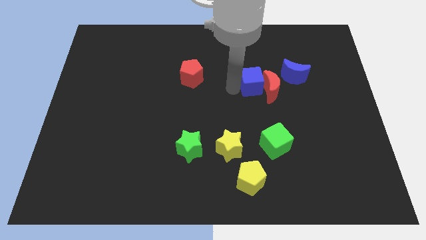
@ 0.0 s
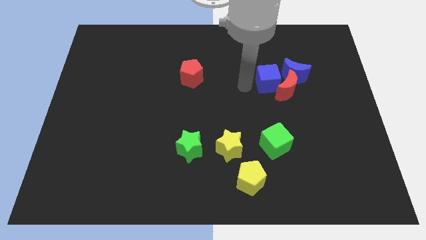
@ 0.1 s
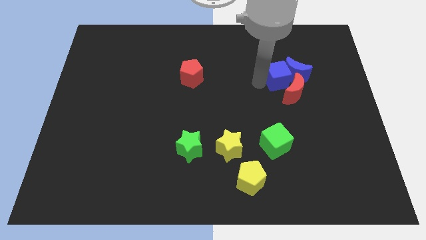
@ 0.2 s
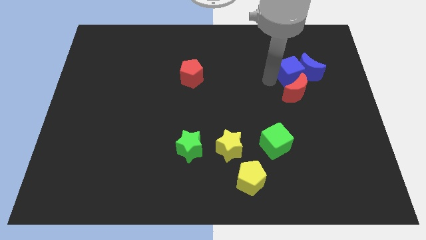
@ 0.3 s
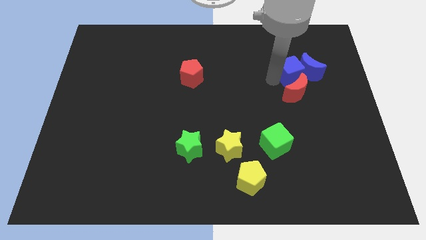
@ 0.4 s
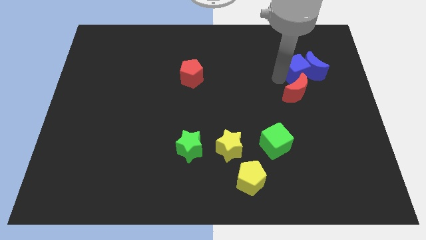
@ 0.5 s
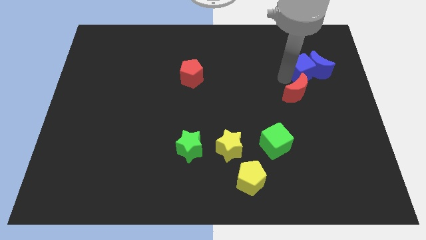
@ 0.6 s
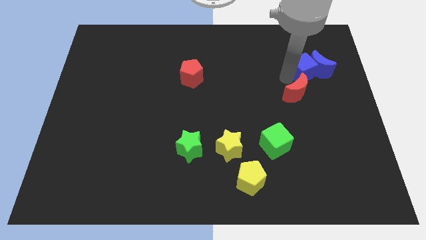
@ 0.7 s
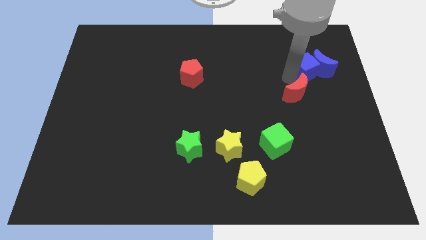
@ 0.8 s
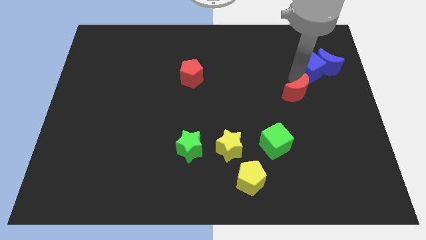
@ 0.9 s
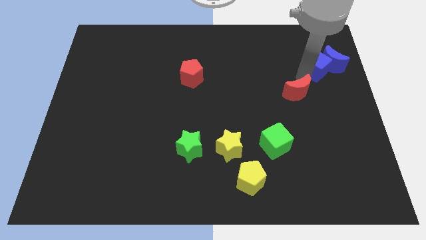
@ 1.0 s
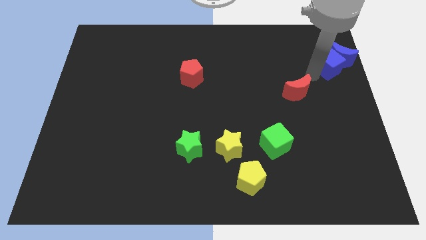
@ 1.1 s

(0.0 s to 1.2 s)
push blue cube in to blue crescent

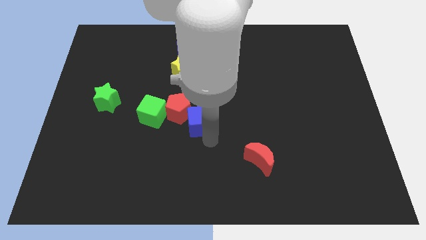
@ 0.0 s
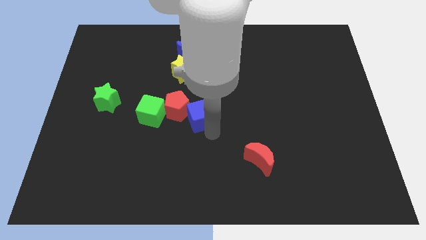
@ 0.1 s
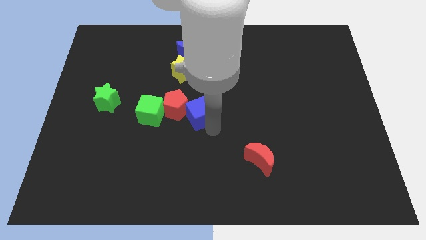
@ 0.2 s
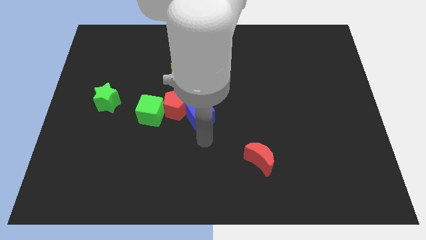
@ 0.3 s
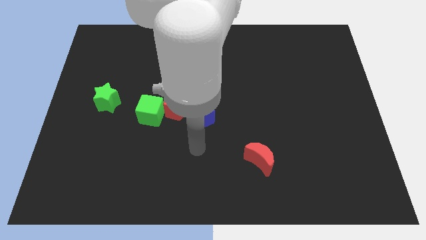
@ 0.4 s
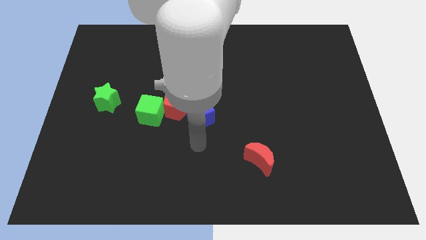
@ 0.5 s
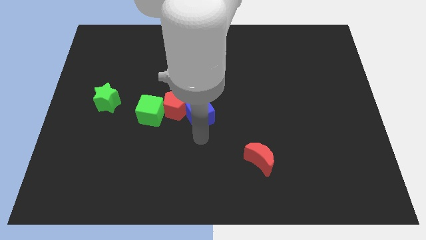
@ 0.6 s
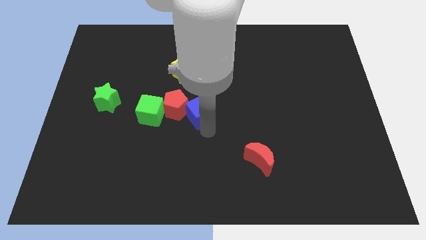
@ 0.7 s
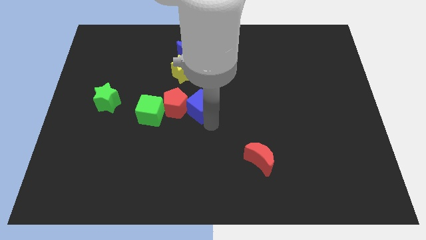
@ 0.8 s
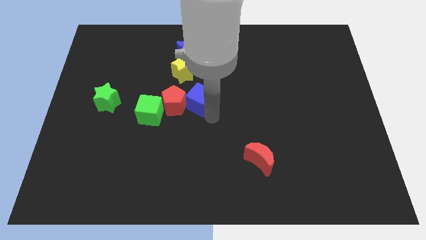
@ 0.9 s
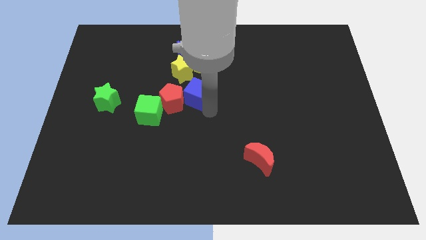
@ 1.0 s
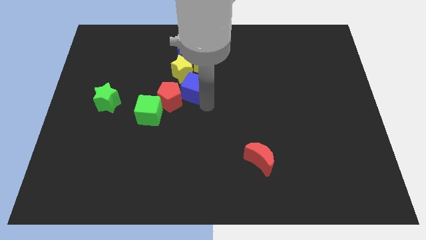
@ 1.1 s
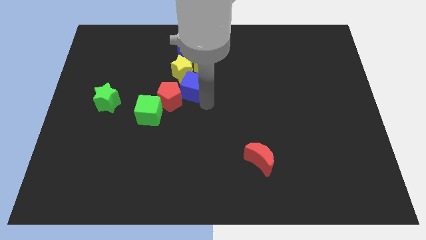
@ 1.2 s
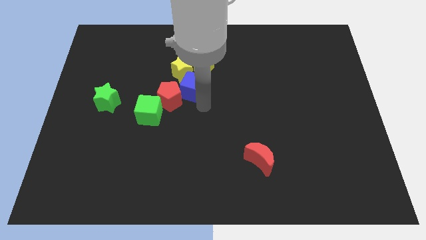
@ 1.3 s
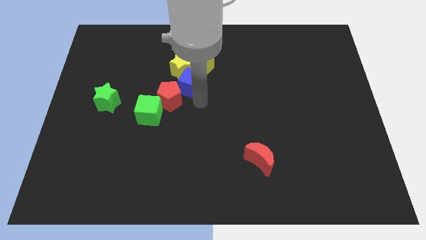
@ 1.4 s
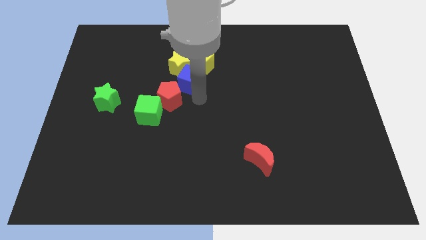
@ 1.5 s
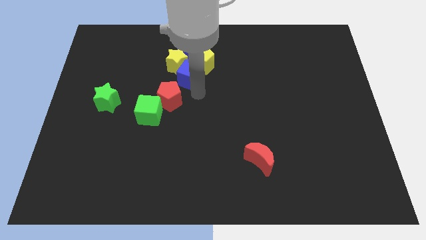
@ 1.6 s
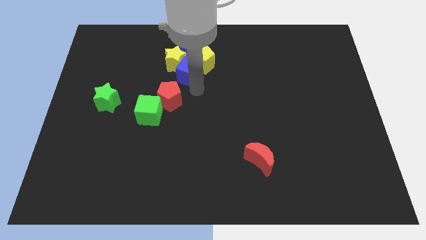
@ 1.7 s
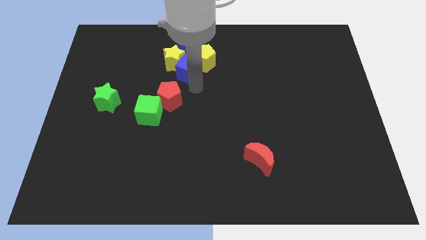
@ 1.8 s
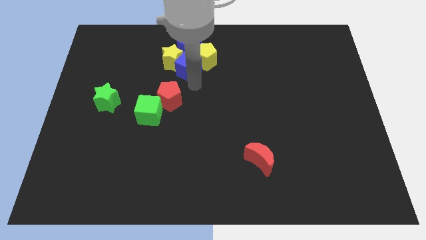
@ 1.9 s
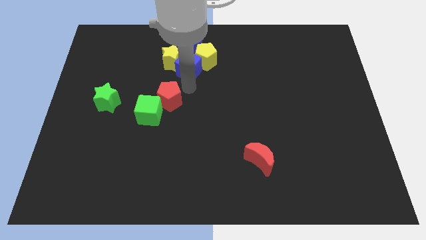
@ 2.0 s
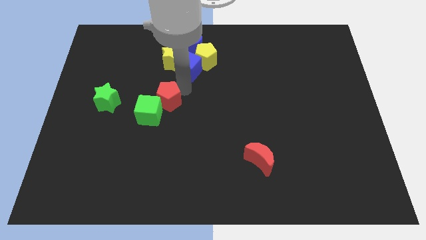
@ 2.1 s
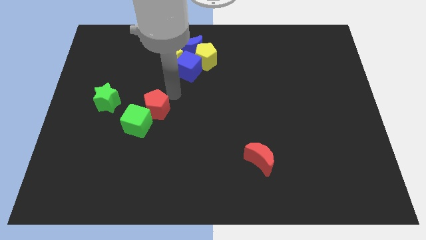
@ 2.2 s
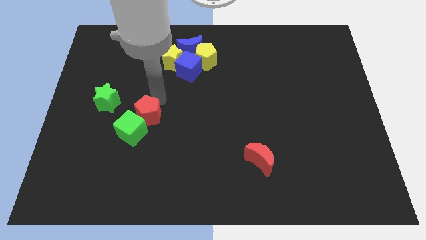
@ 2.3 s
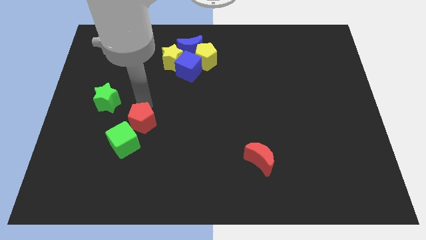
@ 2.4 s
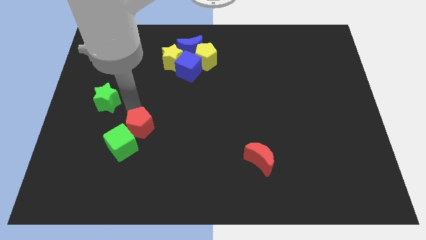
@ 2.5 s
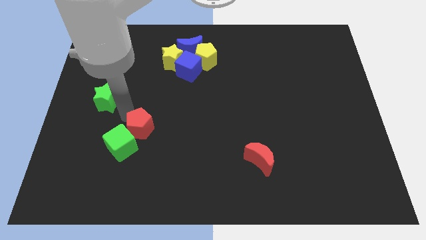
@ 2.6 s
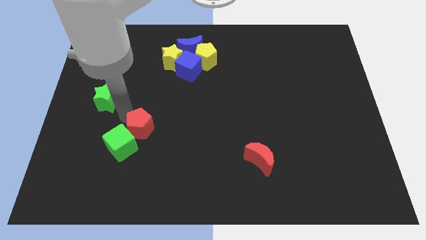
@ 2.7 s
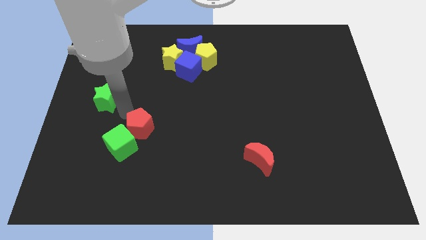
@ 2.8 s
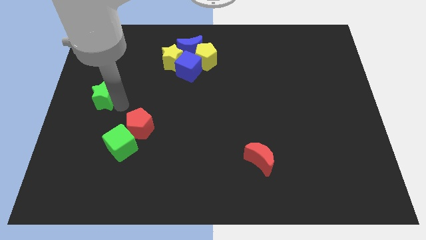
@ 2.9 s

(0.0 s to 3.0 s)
push red pentagon along with green cube towards bottom

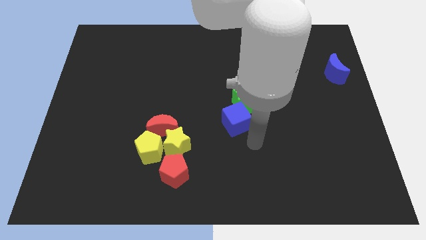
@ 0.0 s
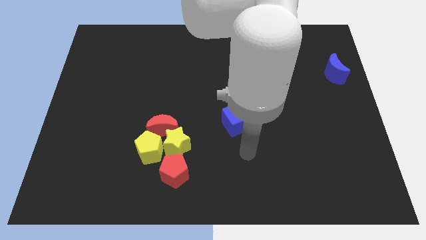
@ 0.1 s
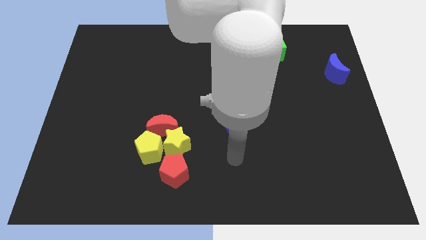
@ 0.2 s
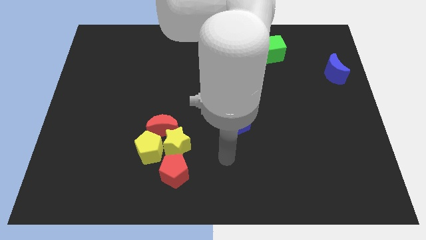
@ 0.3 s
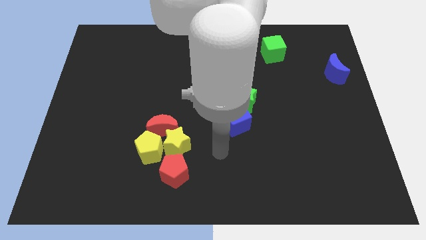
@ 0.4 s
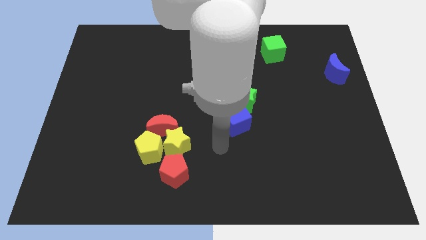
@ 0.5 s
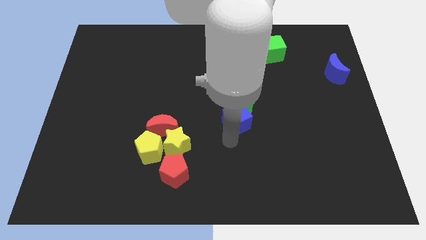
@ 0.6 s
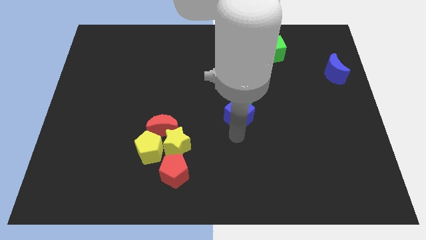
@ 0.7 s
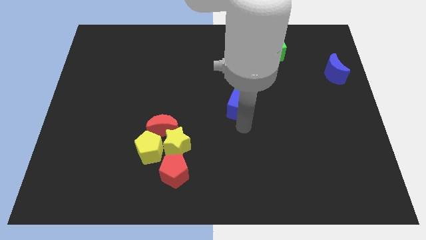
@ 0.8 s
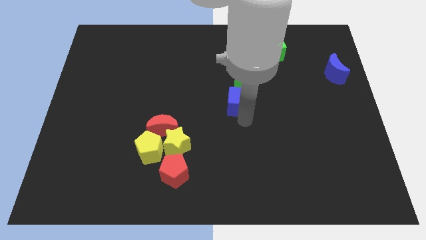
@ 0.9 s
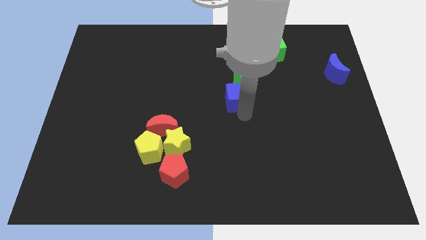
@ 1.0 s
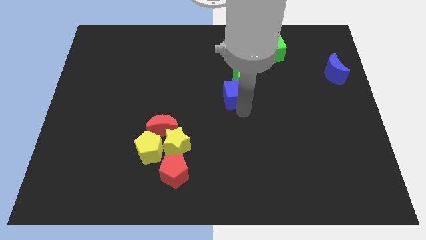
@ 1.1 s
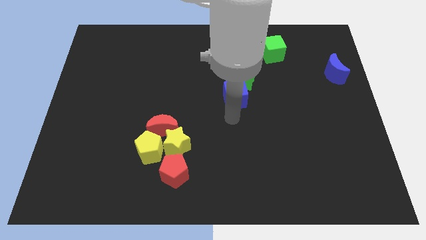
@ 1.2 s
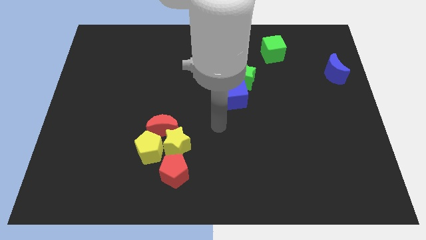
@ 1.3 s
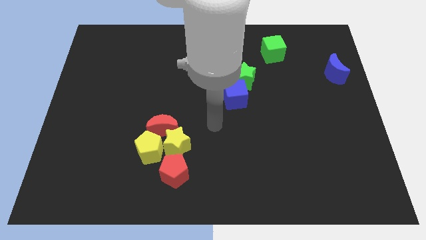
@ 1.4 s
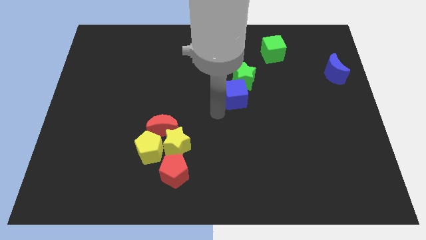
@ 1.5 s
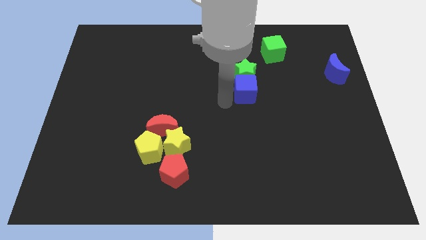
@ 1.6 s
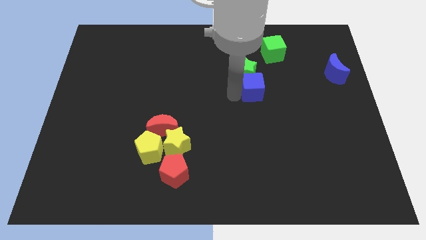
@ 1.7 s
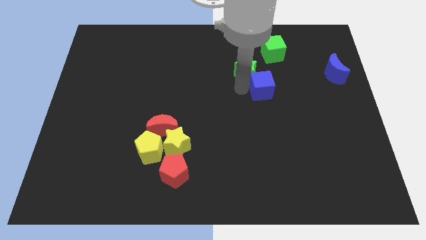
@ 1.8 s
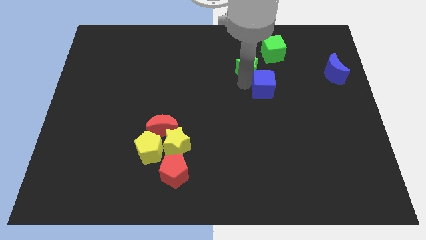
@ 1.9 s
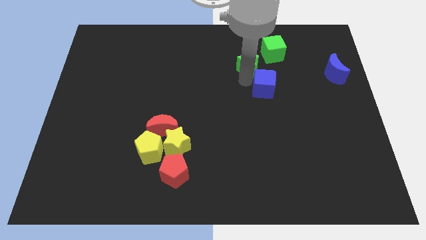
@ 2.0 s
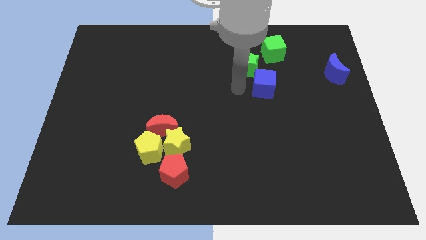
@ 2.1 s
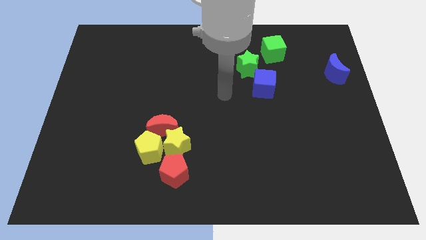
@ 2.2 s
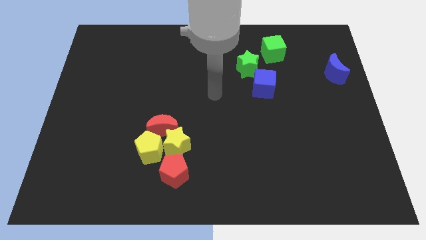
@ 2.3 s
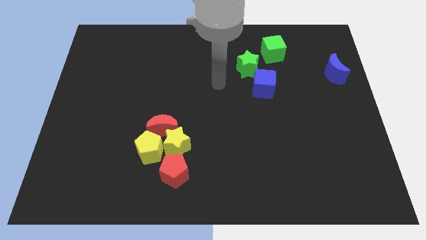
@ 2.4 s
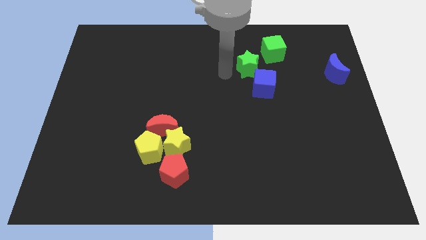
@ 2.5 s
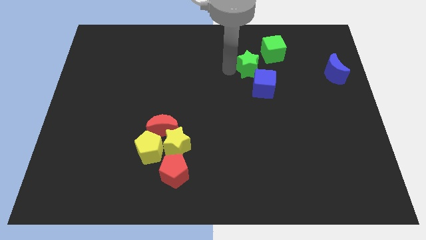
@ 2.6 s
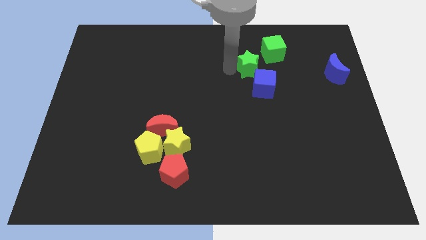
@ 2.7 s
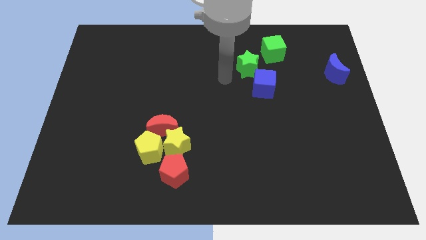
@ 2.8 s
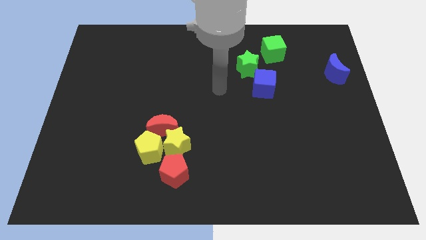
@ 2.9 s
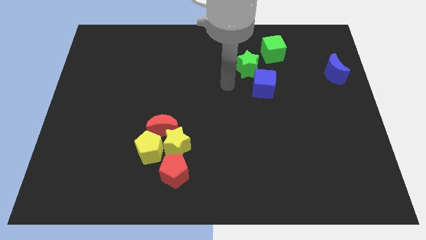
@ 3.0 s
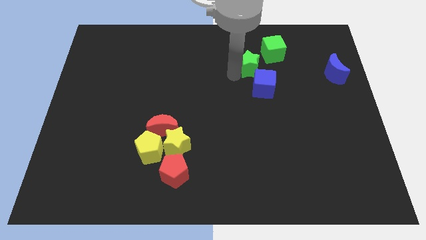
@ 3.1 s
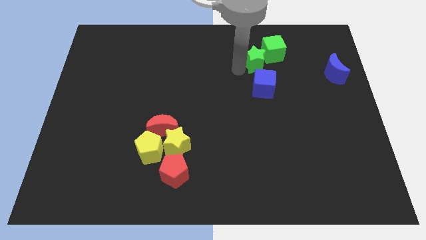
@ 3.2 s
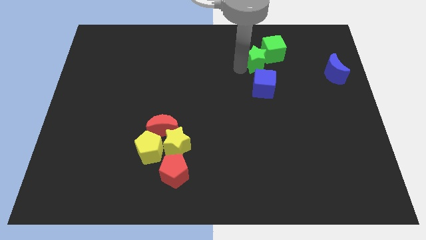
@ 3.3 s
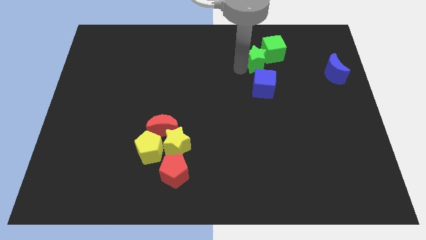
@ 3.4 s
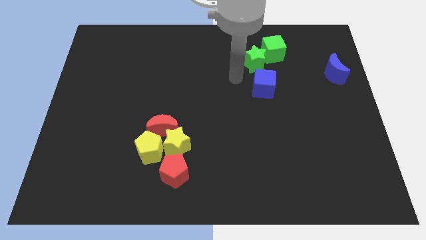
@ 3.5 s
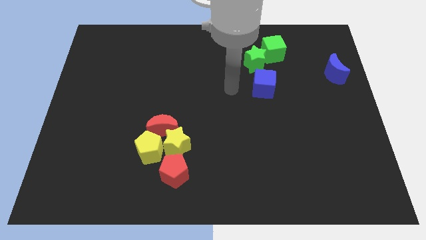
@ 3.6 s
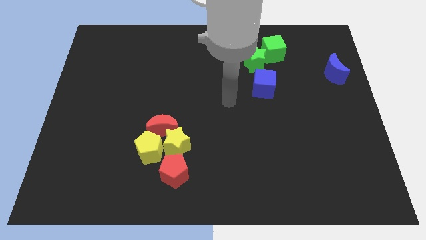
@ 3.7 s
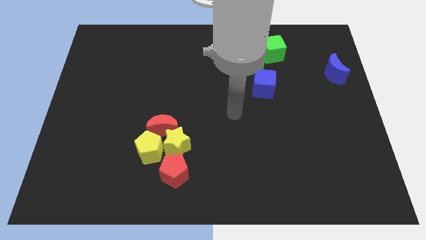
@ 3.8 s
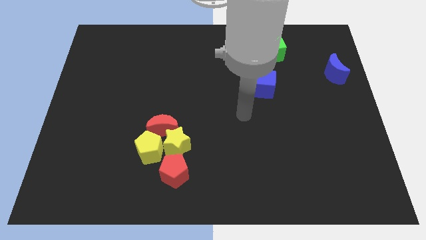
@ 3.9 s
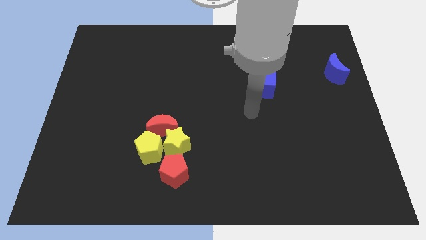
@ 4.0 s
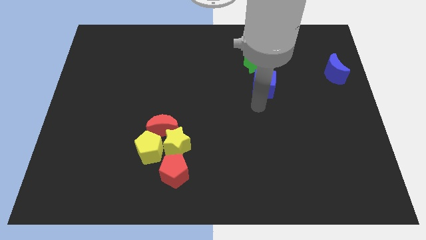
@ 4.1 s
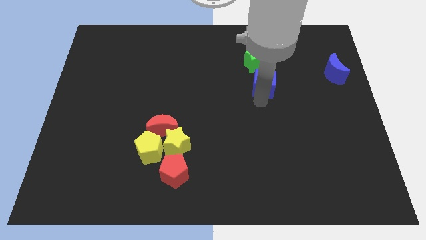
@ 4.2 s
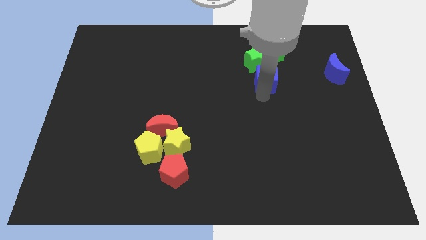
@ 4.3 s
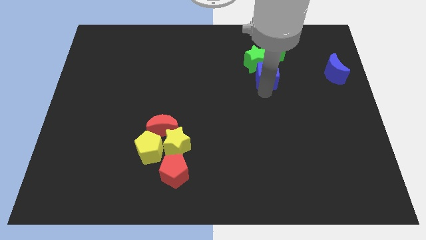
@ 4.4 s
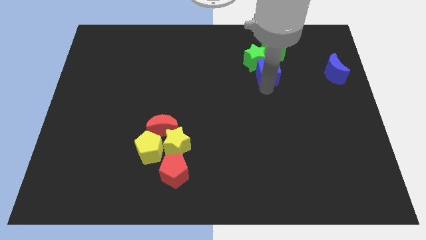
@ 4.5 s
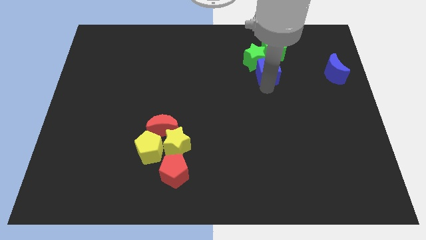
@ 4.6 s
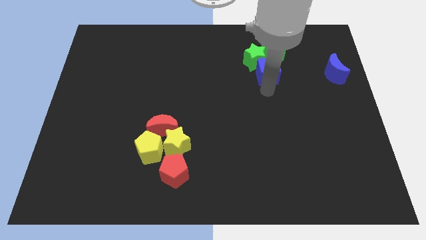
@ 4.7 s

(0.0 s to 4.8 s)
push the blue cube and green star towards the green cube
